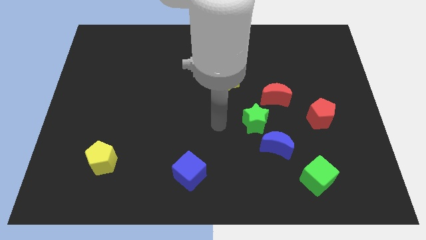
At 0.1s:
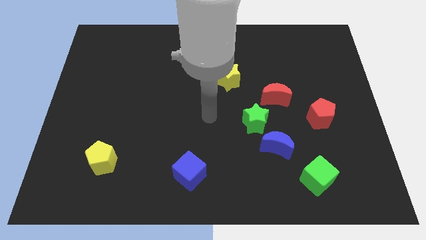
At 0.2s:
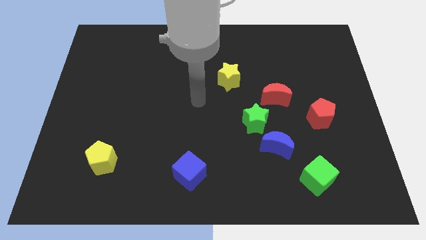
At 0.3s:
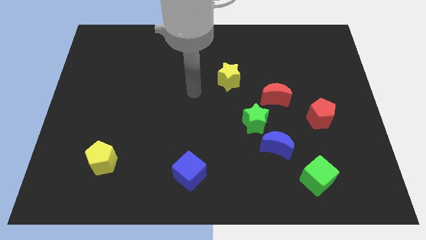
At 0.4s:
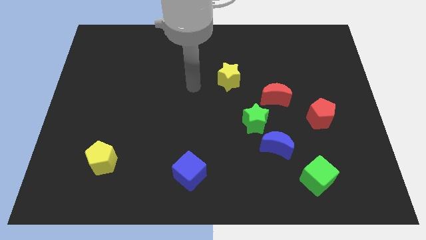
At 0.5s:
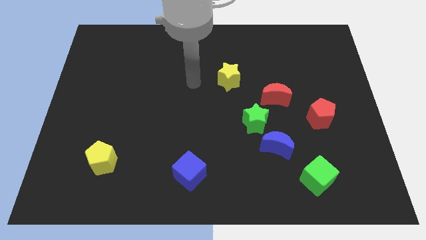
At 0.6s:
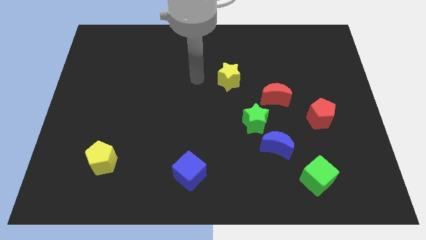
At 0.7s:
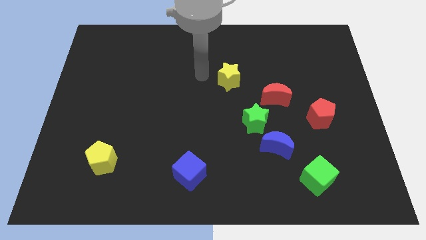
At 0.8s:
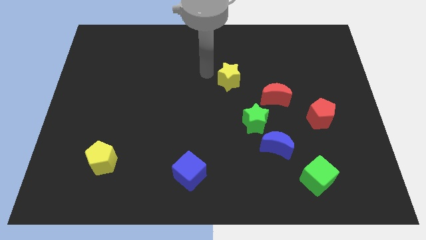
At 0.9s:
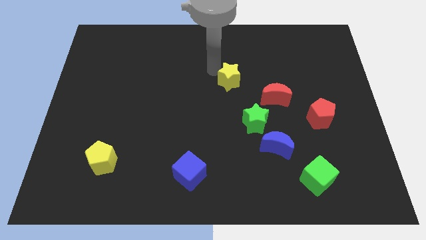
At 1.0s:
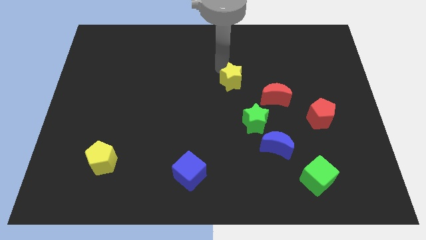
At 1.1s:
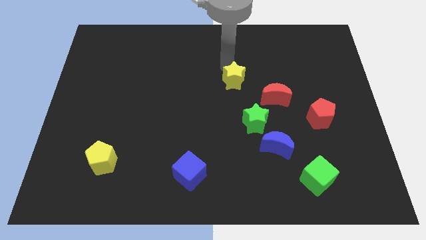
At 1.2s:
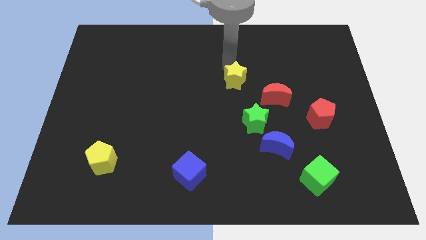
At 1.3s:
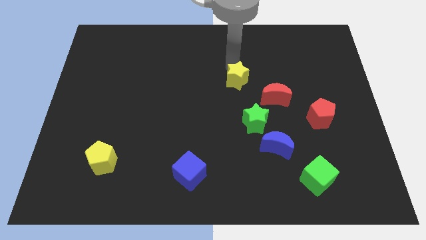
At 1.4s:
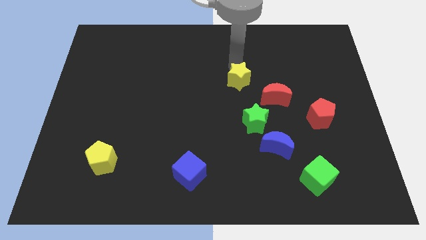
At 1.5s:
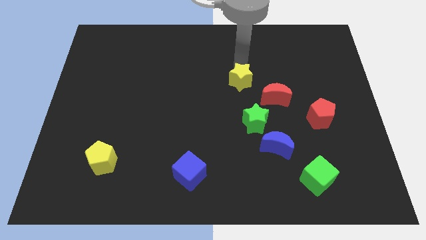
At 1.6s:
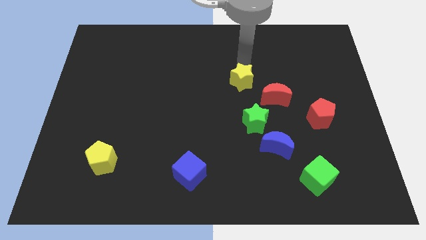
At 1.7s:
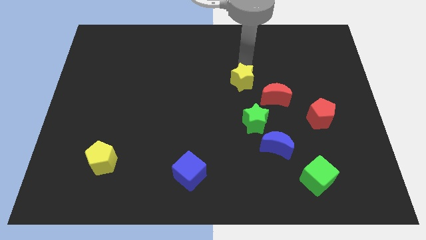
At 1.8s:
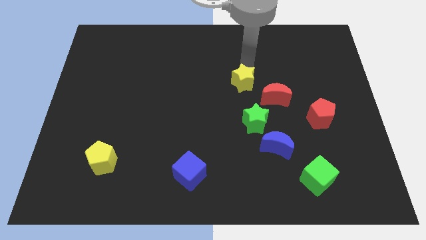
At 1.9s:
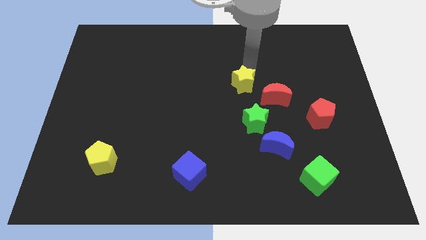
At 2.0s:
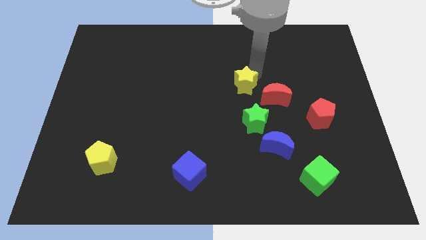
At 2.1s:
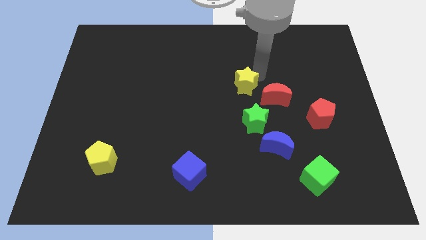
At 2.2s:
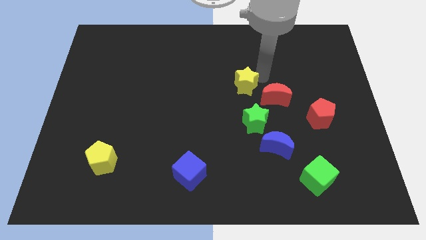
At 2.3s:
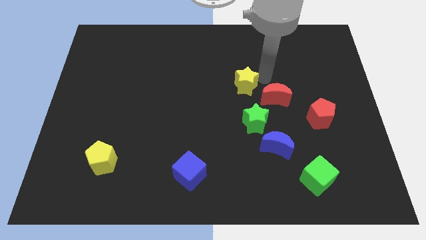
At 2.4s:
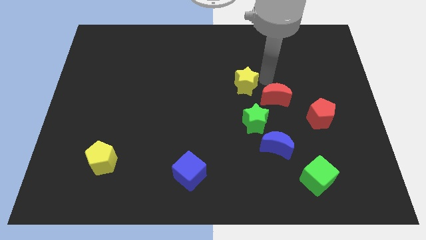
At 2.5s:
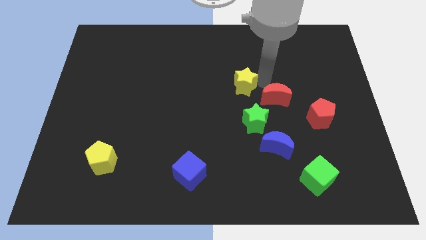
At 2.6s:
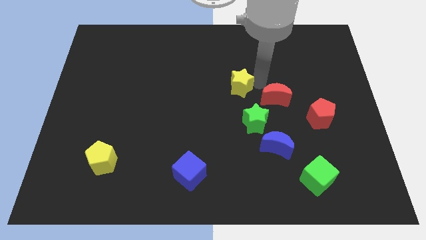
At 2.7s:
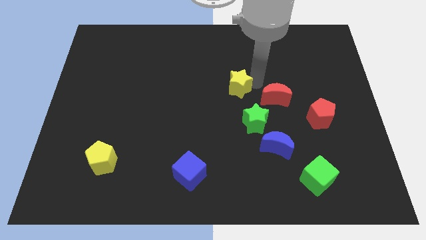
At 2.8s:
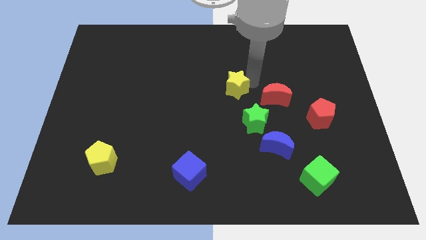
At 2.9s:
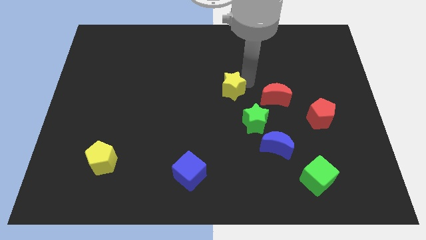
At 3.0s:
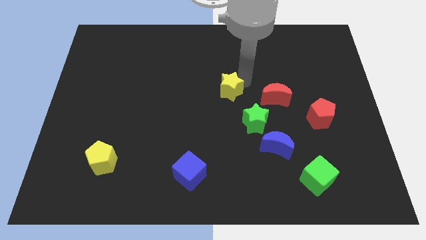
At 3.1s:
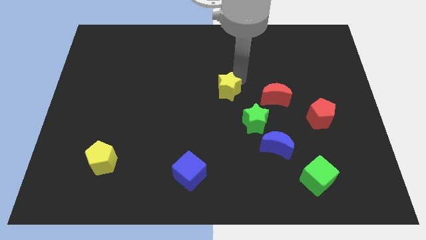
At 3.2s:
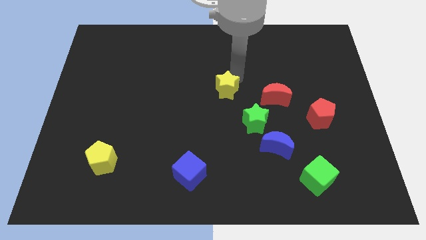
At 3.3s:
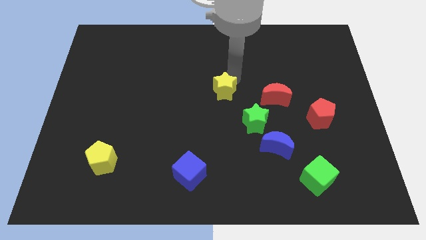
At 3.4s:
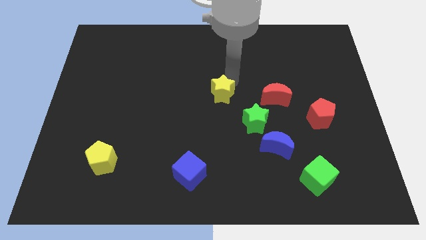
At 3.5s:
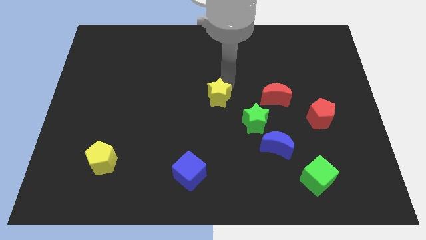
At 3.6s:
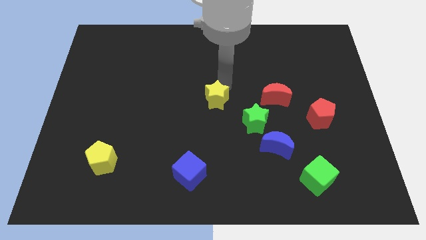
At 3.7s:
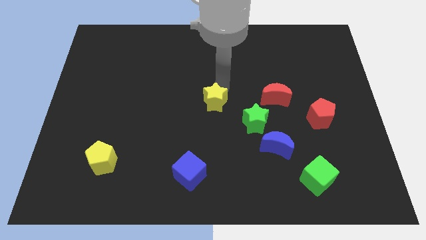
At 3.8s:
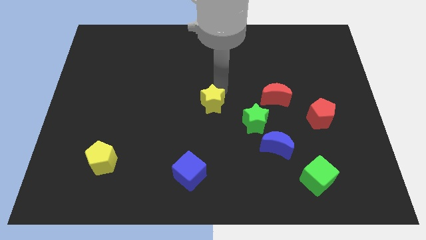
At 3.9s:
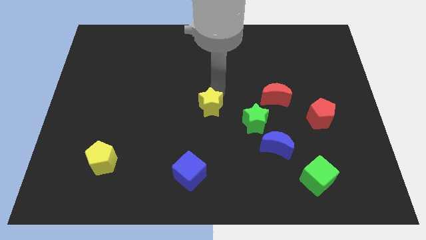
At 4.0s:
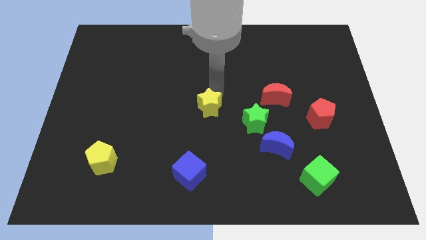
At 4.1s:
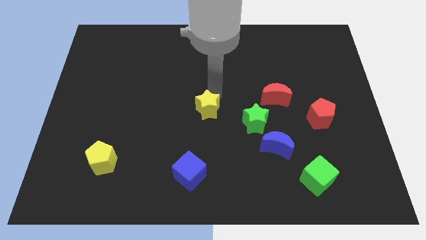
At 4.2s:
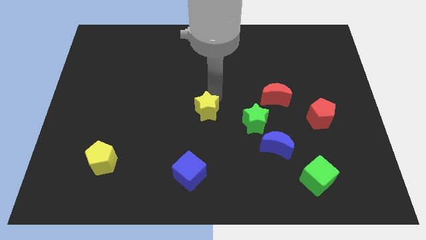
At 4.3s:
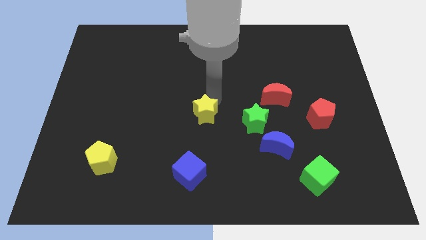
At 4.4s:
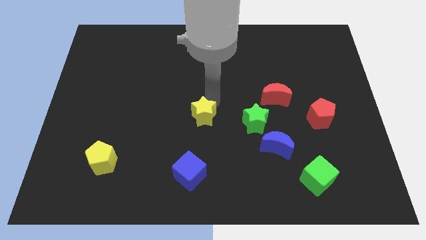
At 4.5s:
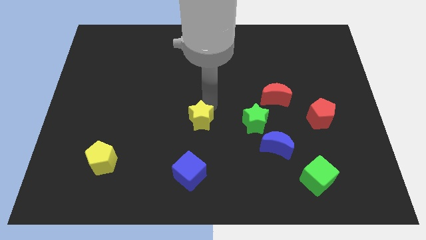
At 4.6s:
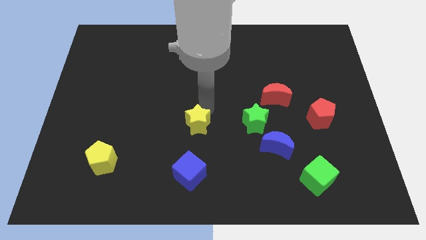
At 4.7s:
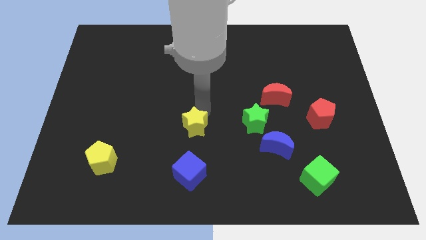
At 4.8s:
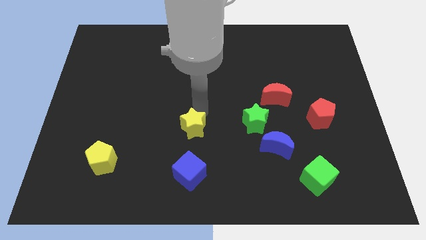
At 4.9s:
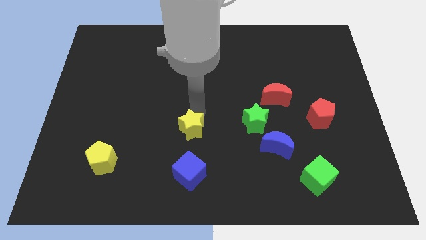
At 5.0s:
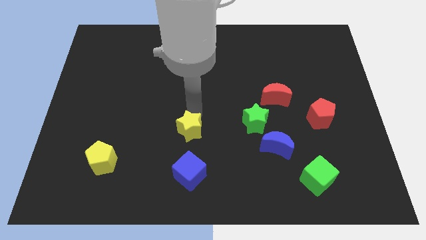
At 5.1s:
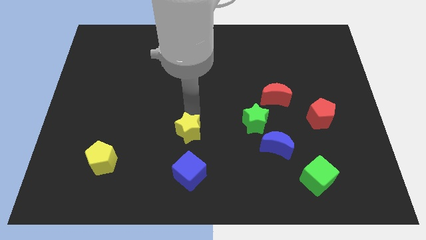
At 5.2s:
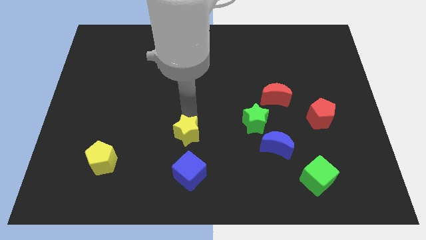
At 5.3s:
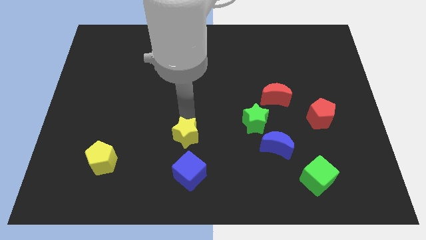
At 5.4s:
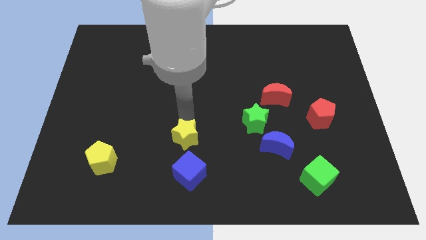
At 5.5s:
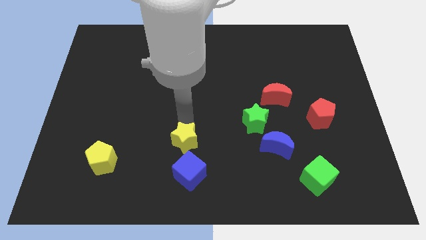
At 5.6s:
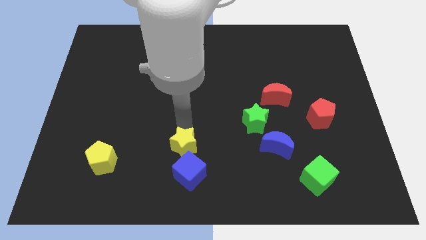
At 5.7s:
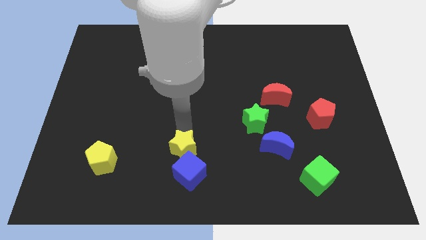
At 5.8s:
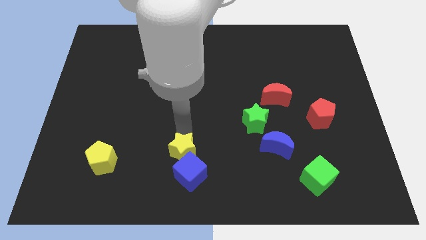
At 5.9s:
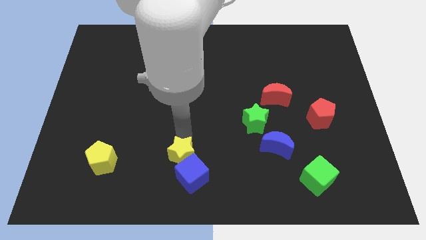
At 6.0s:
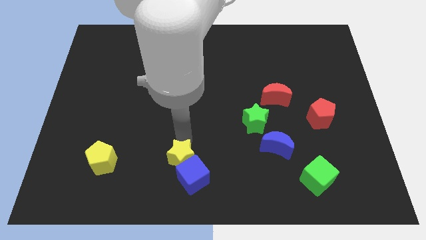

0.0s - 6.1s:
slide the yellow star to the blue cube

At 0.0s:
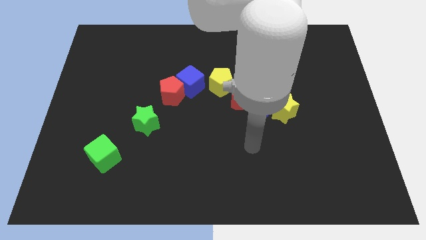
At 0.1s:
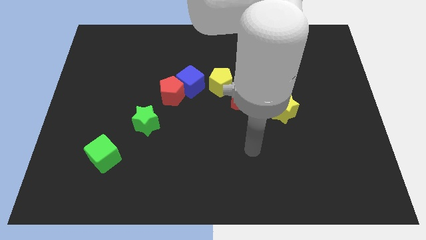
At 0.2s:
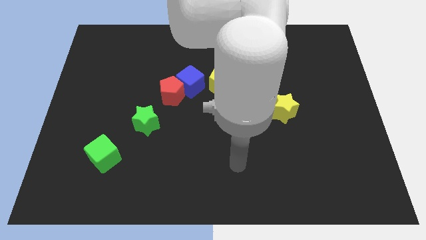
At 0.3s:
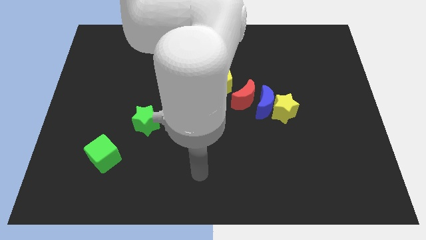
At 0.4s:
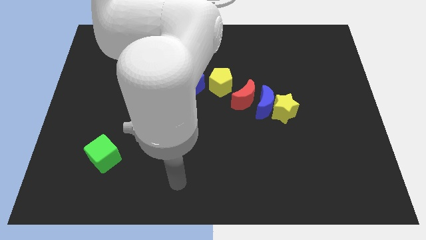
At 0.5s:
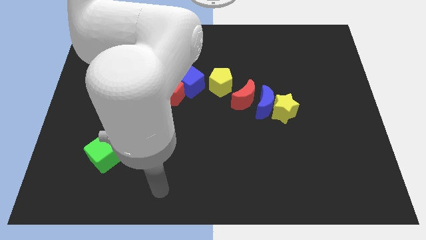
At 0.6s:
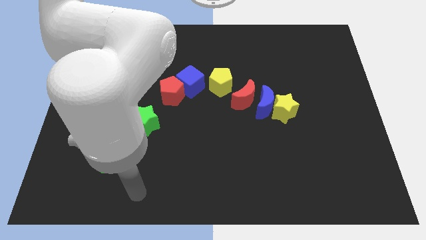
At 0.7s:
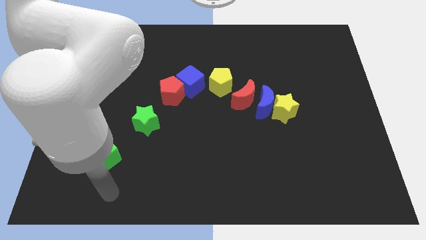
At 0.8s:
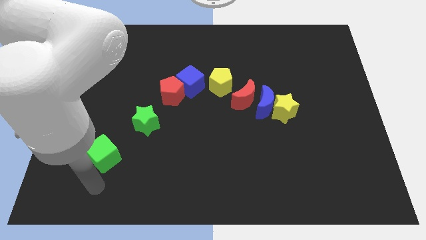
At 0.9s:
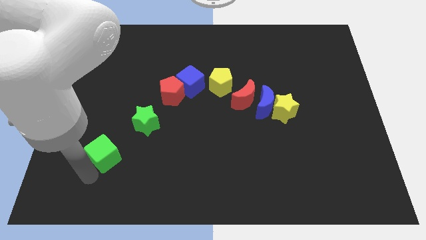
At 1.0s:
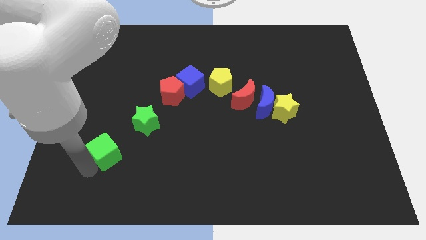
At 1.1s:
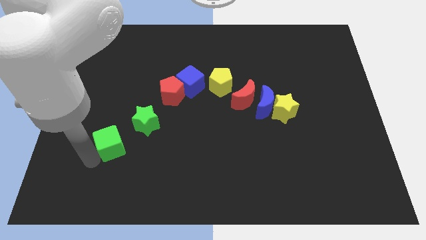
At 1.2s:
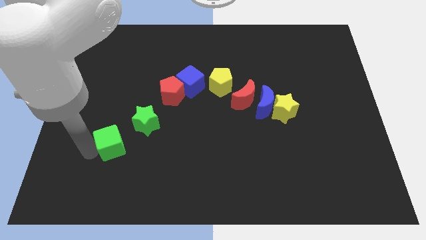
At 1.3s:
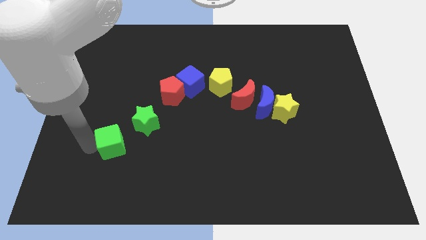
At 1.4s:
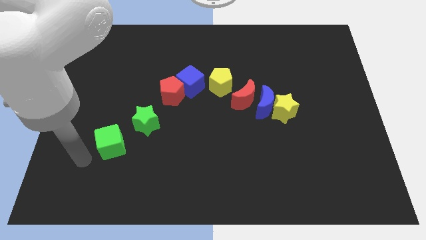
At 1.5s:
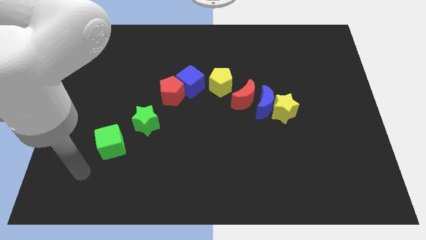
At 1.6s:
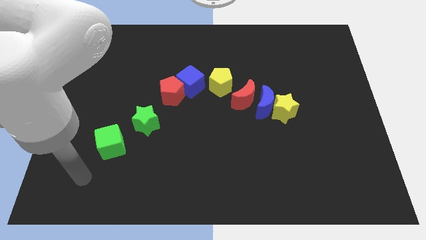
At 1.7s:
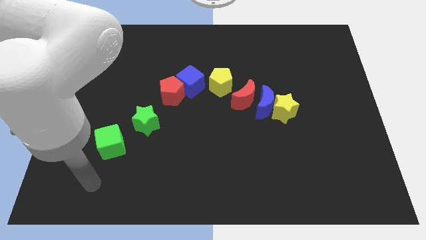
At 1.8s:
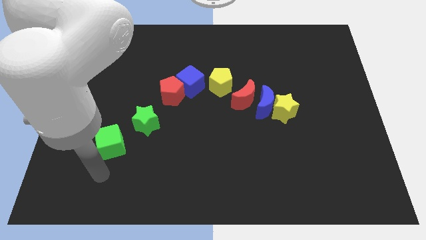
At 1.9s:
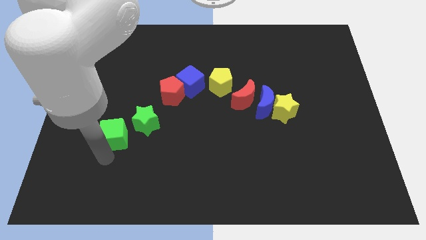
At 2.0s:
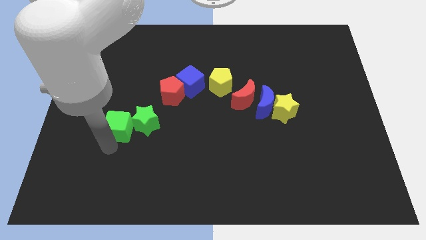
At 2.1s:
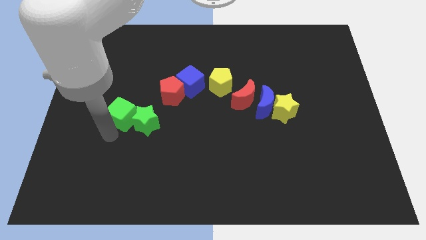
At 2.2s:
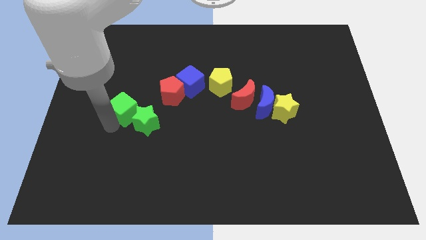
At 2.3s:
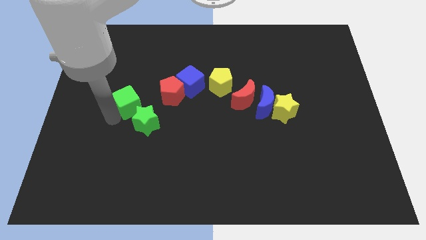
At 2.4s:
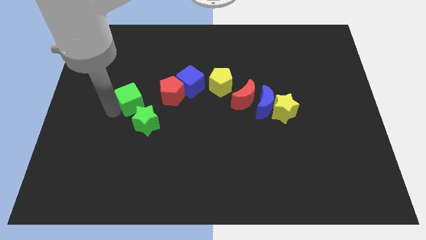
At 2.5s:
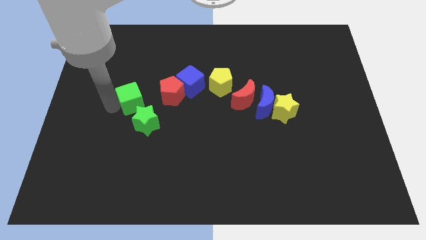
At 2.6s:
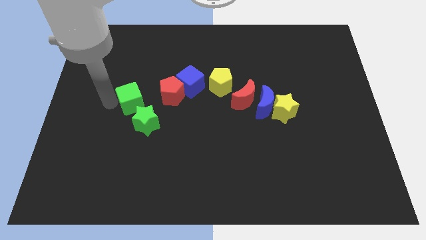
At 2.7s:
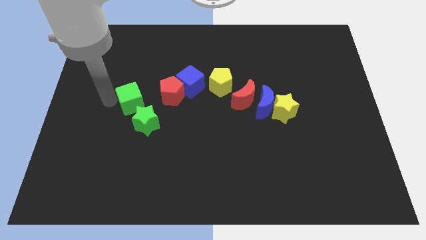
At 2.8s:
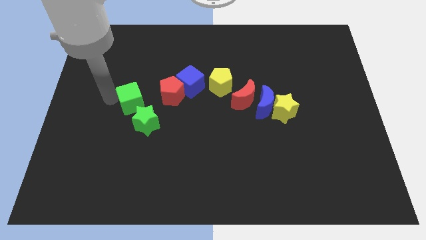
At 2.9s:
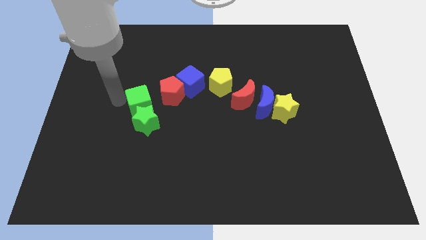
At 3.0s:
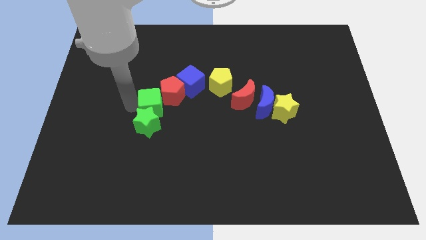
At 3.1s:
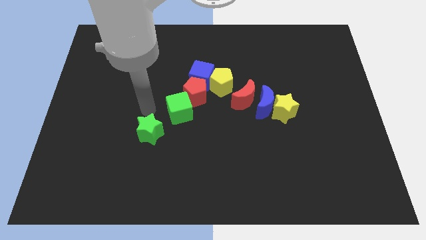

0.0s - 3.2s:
move the green cube towards the red pentagon
